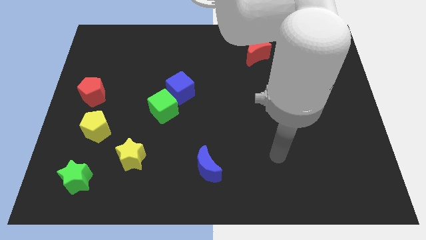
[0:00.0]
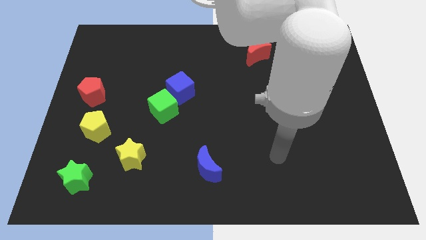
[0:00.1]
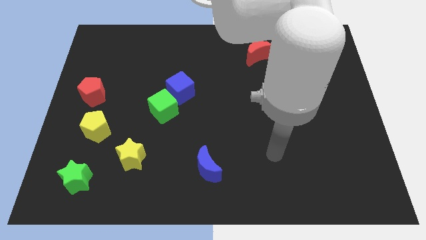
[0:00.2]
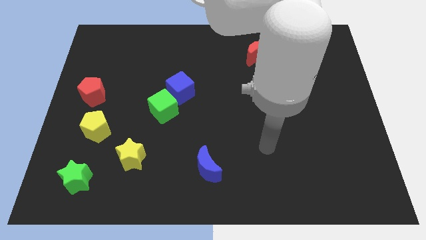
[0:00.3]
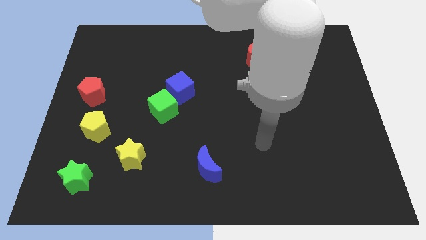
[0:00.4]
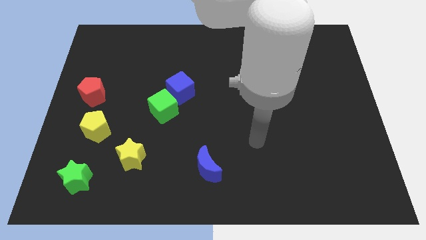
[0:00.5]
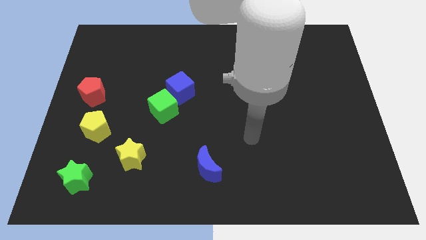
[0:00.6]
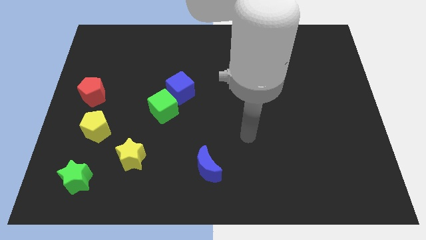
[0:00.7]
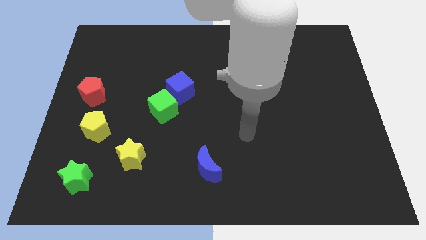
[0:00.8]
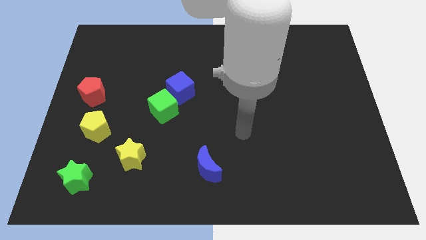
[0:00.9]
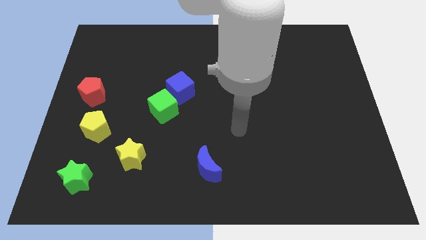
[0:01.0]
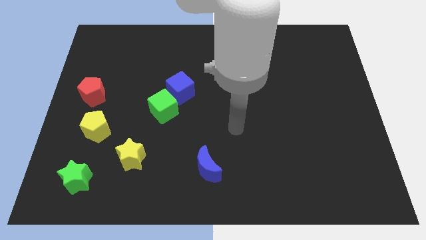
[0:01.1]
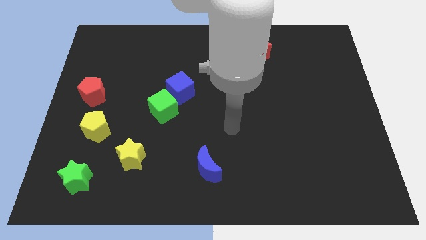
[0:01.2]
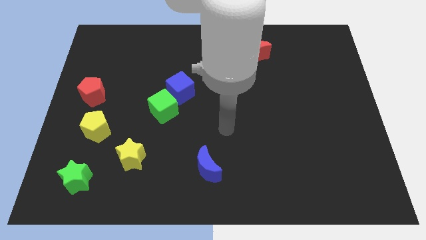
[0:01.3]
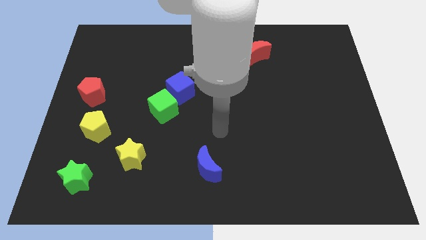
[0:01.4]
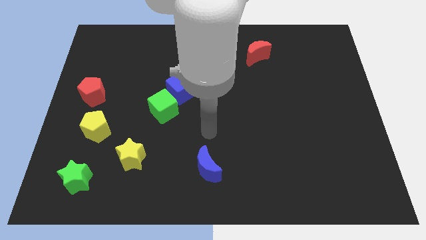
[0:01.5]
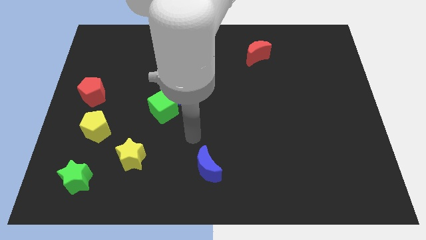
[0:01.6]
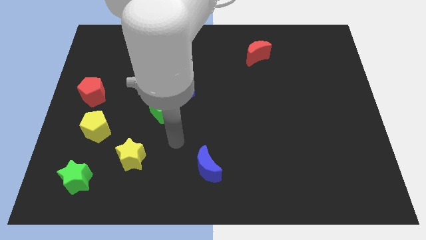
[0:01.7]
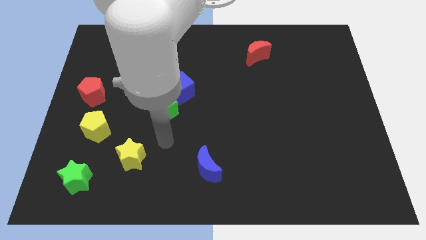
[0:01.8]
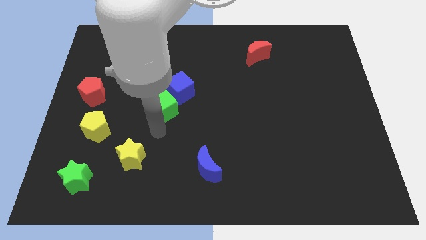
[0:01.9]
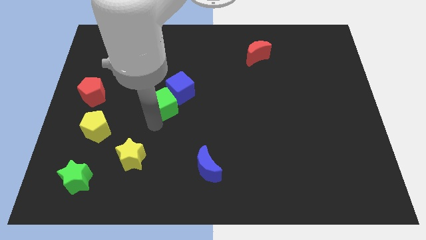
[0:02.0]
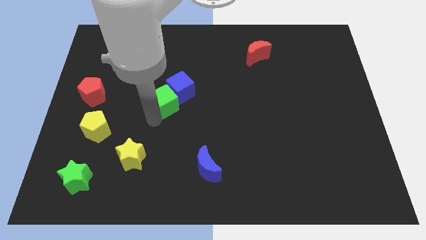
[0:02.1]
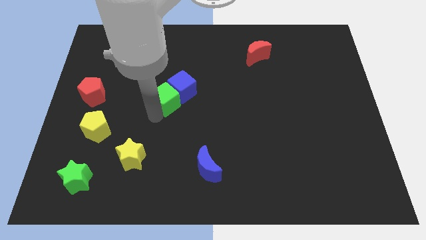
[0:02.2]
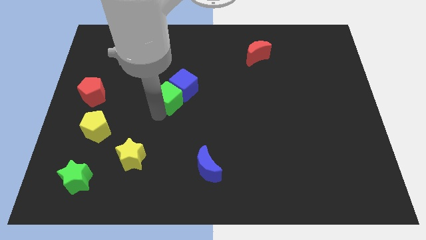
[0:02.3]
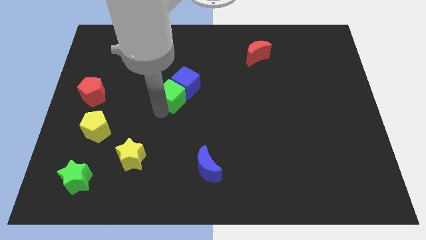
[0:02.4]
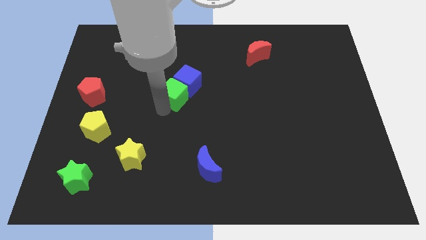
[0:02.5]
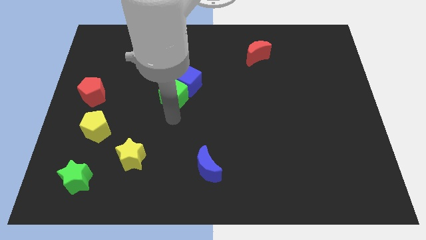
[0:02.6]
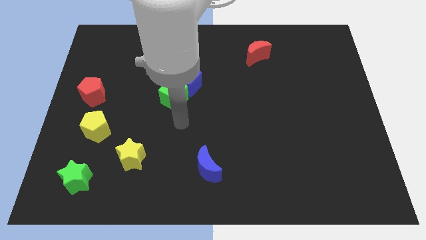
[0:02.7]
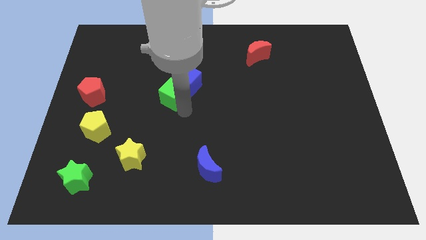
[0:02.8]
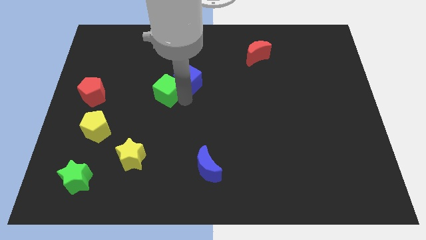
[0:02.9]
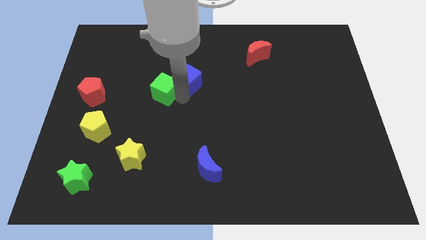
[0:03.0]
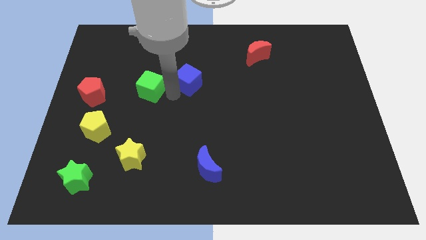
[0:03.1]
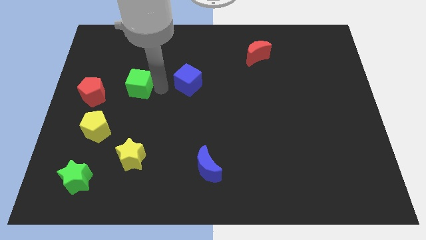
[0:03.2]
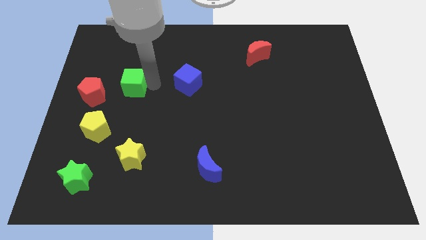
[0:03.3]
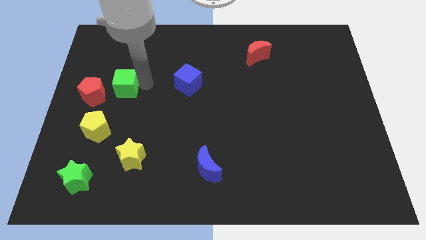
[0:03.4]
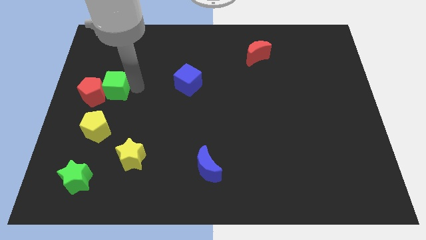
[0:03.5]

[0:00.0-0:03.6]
move the green cube to the right of the red pentagon

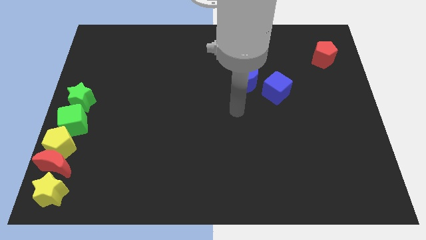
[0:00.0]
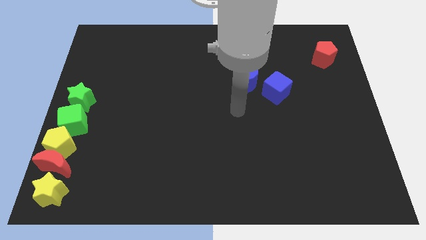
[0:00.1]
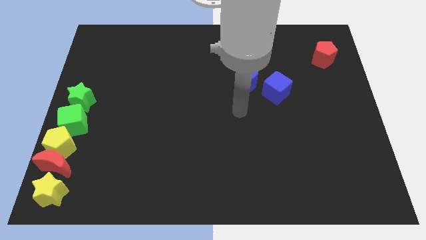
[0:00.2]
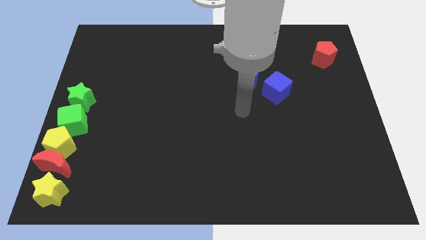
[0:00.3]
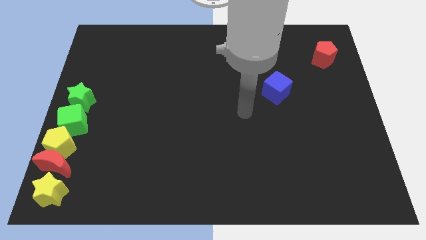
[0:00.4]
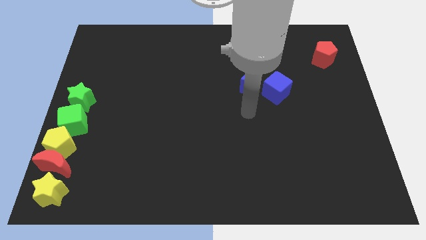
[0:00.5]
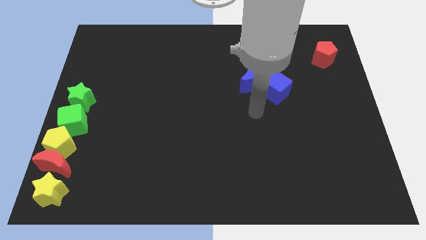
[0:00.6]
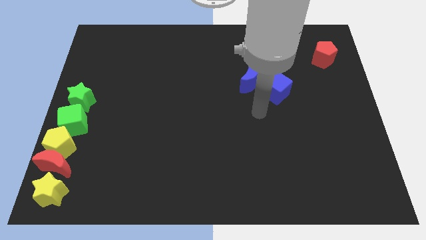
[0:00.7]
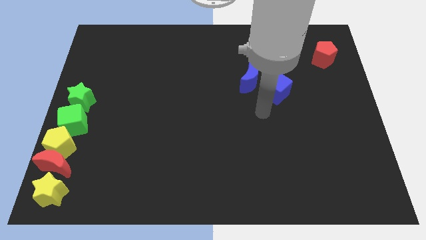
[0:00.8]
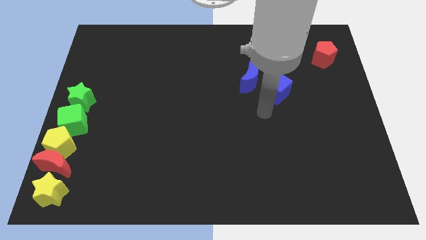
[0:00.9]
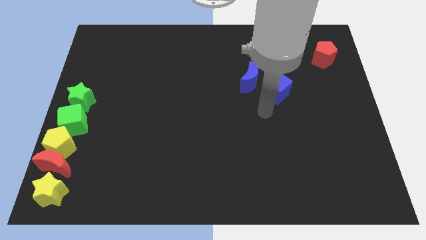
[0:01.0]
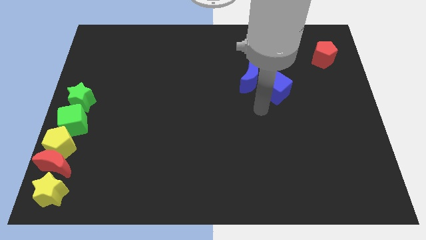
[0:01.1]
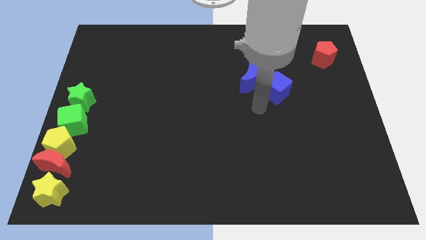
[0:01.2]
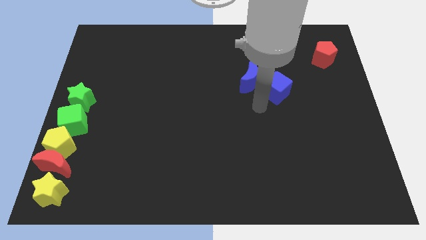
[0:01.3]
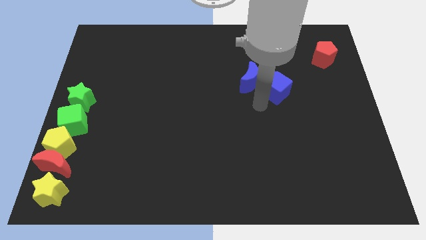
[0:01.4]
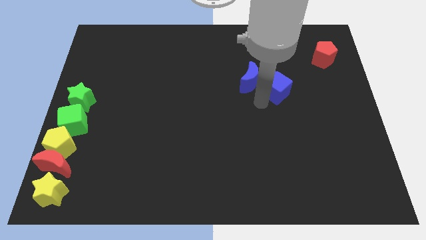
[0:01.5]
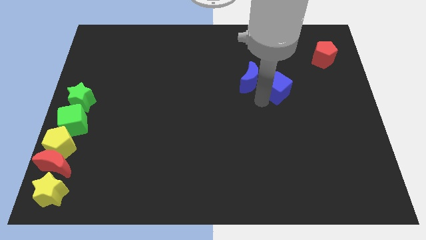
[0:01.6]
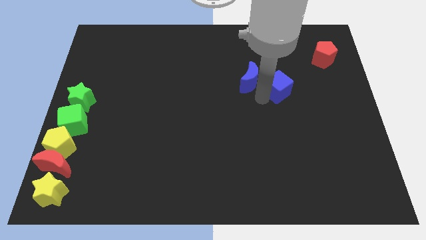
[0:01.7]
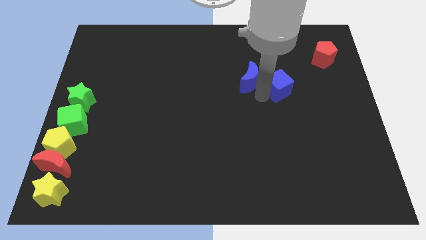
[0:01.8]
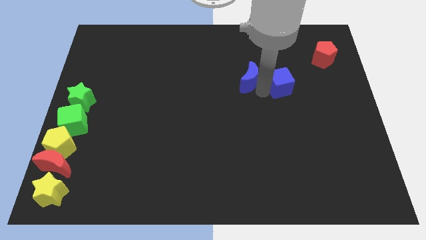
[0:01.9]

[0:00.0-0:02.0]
place blue cube beside blue crescent

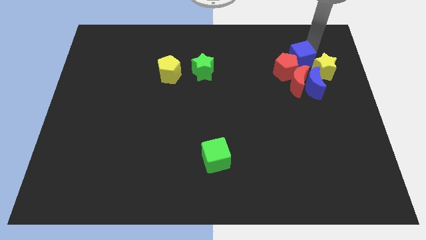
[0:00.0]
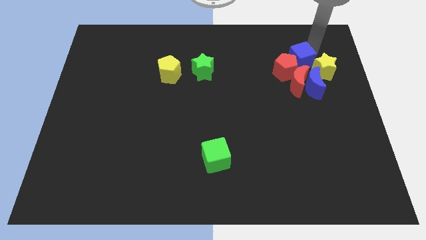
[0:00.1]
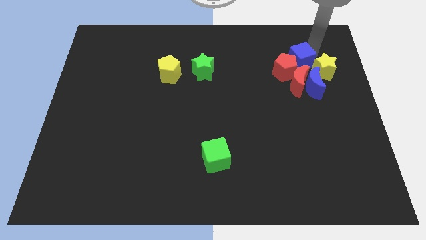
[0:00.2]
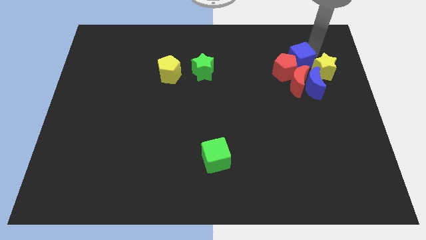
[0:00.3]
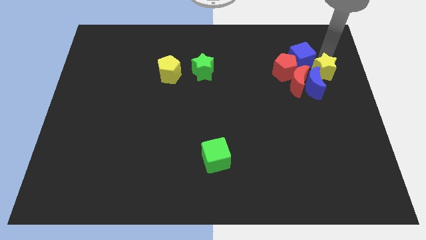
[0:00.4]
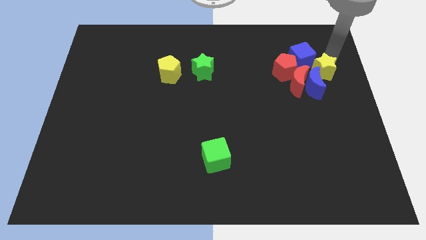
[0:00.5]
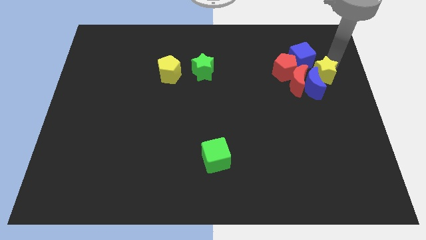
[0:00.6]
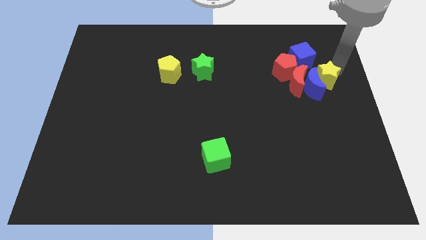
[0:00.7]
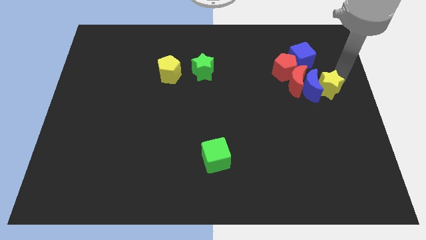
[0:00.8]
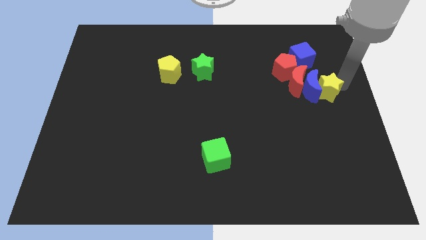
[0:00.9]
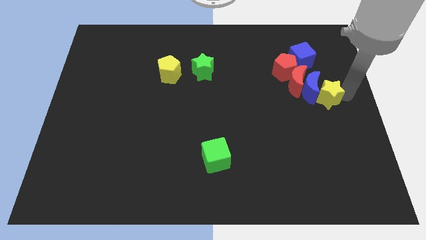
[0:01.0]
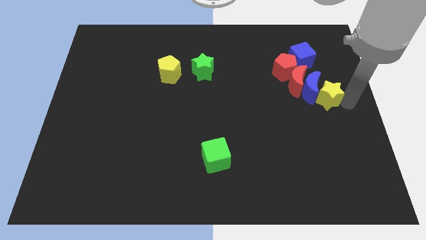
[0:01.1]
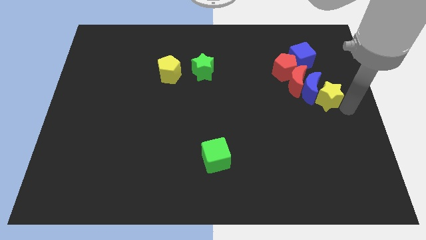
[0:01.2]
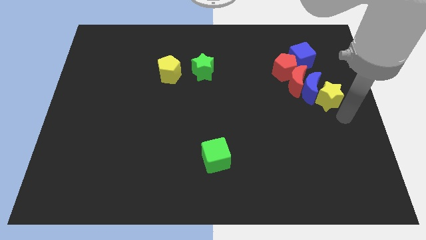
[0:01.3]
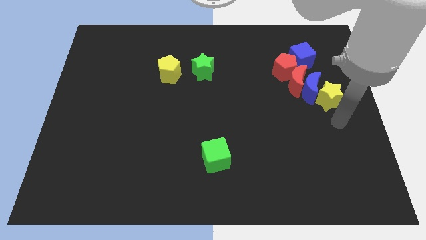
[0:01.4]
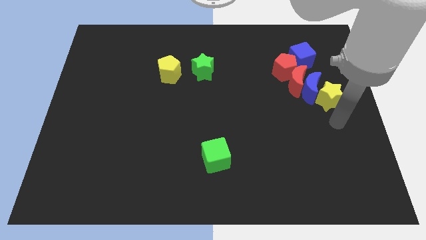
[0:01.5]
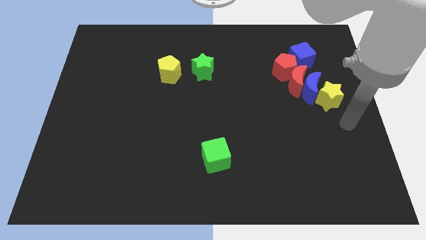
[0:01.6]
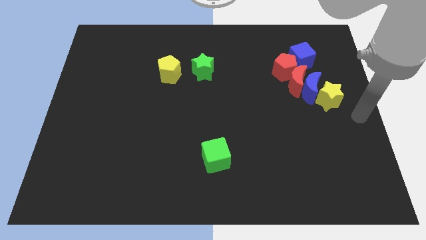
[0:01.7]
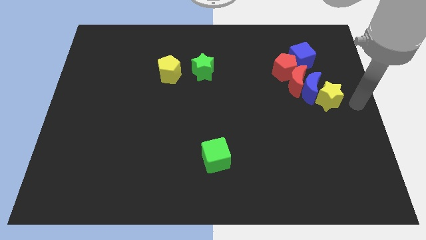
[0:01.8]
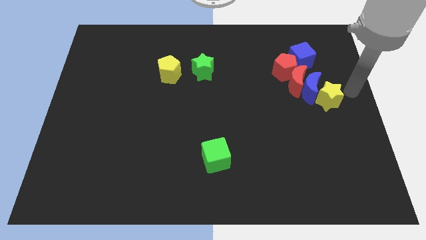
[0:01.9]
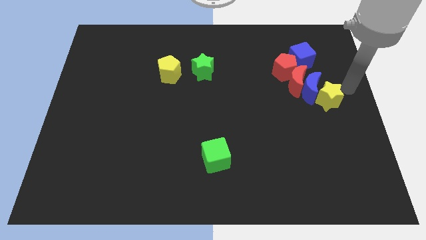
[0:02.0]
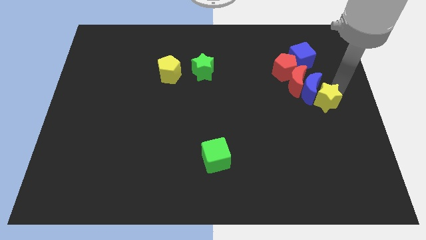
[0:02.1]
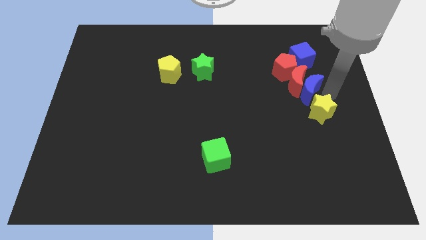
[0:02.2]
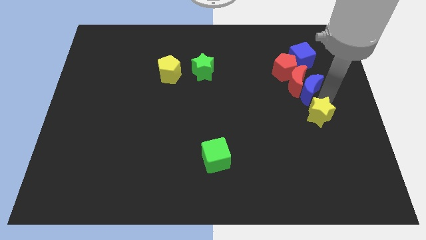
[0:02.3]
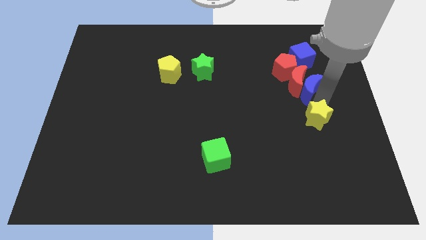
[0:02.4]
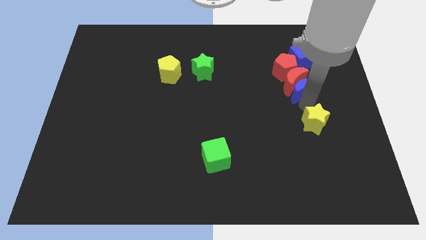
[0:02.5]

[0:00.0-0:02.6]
place yellow star below blue crescent

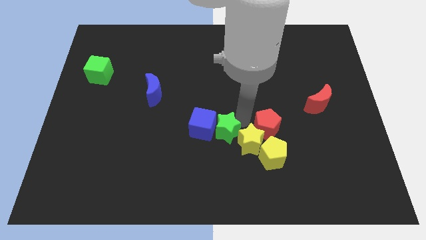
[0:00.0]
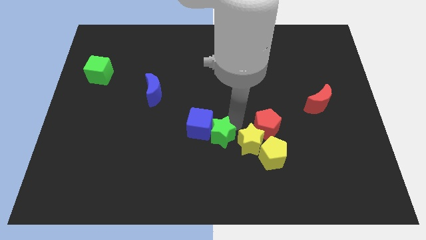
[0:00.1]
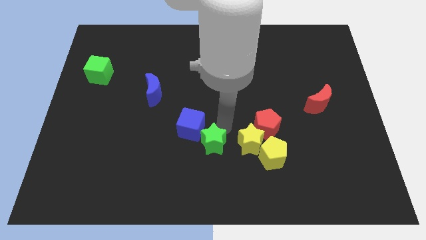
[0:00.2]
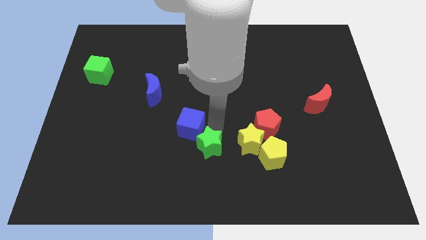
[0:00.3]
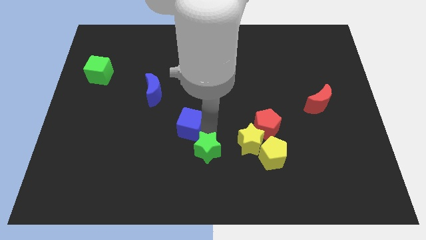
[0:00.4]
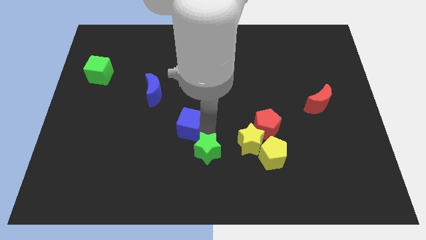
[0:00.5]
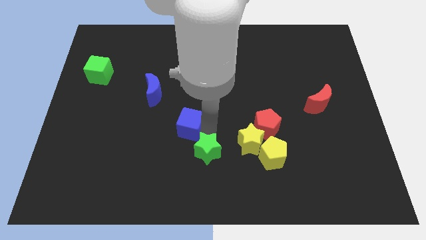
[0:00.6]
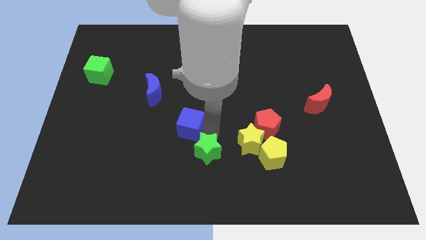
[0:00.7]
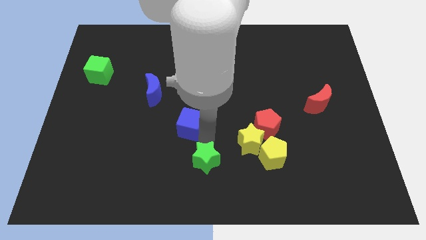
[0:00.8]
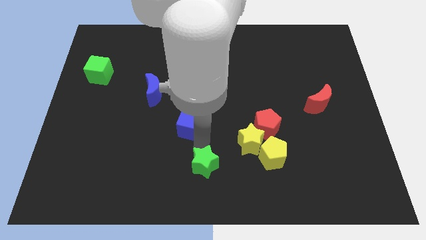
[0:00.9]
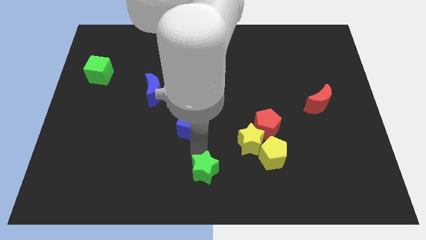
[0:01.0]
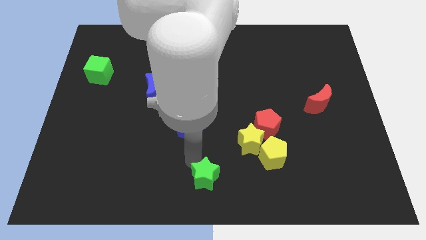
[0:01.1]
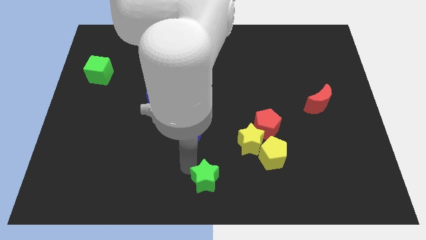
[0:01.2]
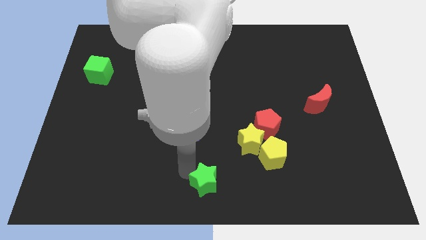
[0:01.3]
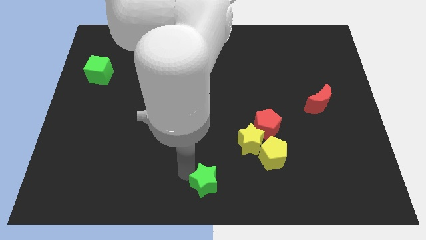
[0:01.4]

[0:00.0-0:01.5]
separate the green star from the blue cube
